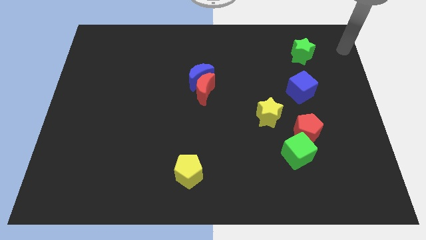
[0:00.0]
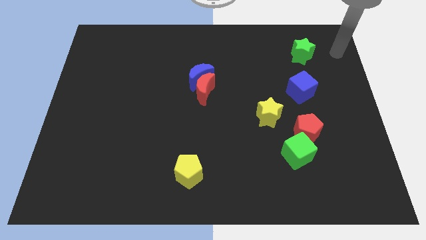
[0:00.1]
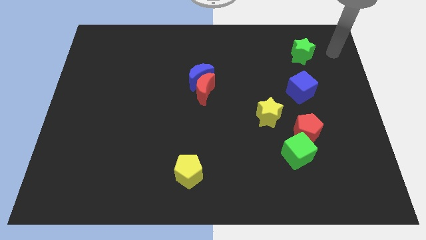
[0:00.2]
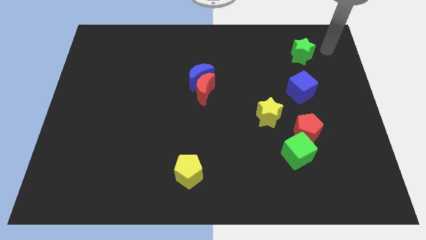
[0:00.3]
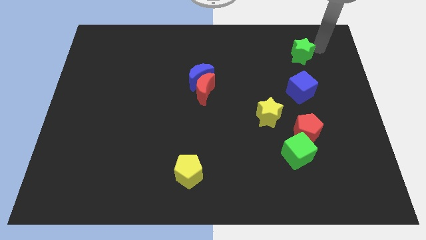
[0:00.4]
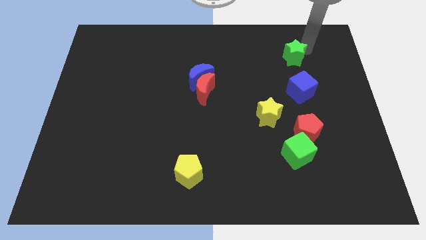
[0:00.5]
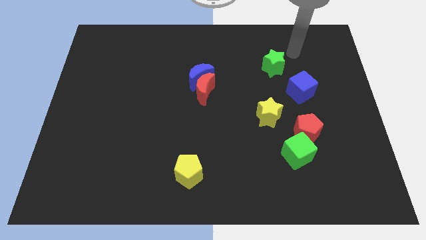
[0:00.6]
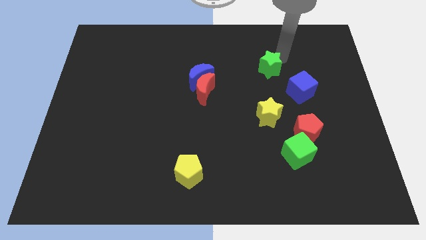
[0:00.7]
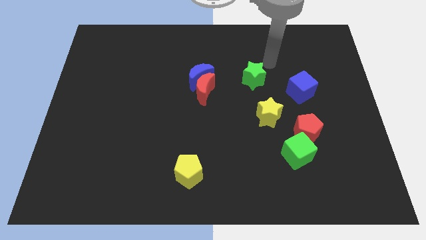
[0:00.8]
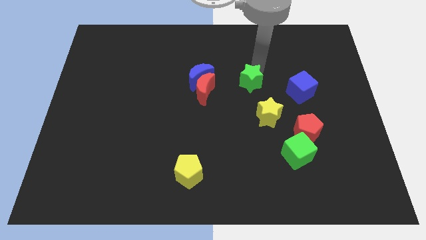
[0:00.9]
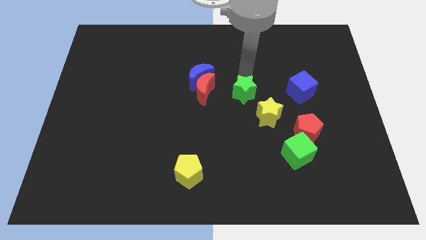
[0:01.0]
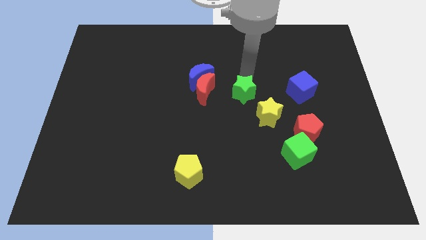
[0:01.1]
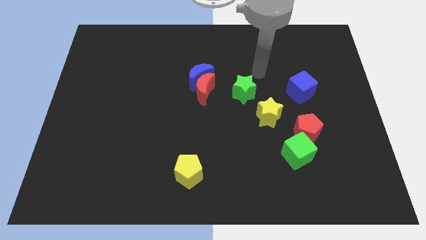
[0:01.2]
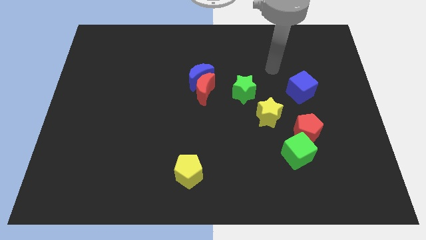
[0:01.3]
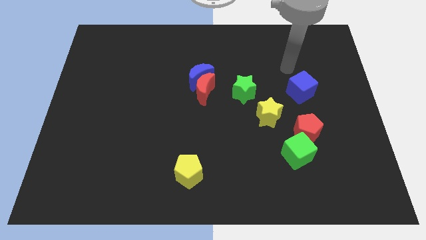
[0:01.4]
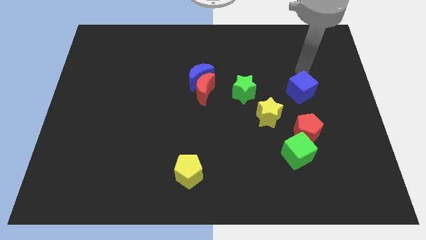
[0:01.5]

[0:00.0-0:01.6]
move green star towards middle of the board

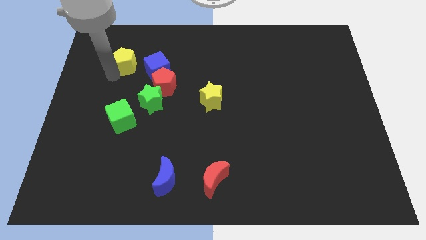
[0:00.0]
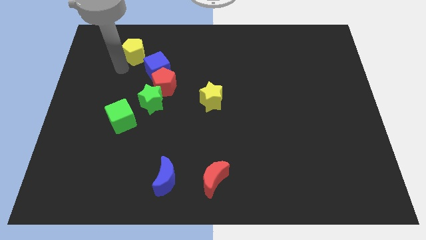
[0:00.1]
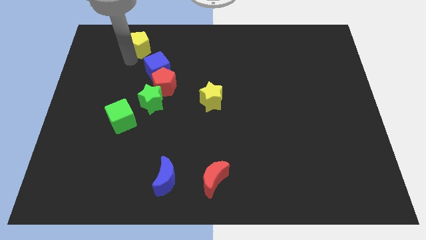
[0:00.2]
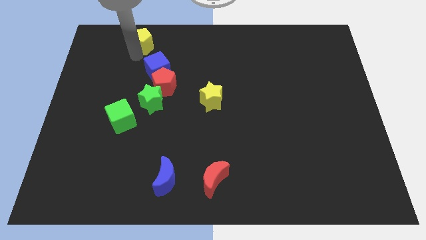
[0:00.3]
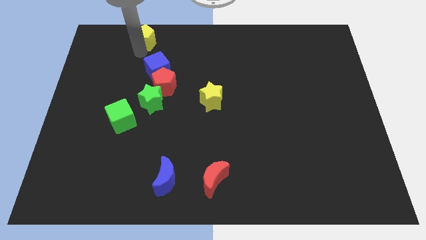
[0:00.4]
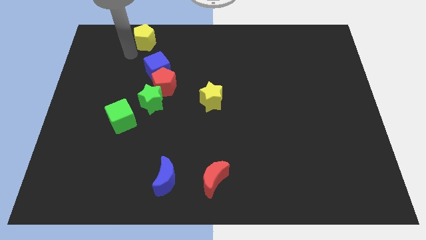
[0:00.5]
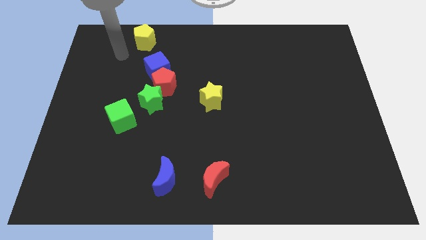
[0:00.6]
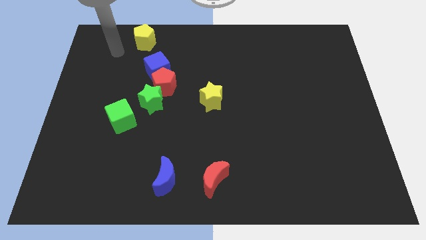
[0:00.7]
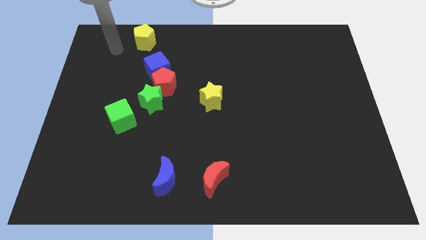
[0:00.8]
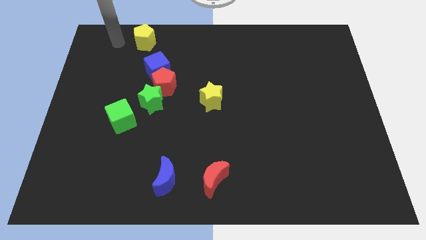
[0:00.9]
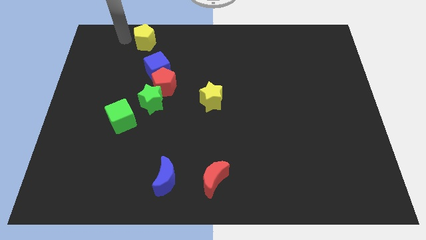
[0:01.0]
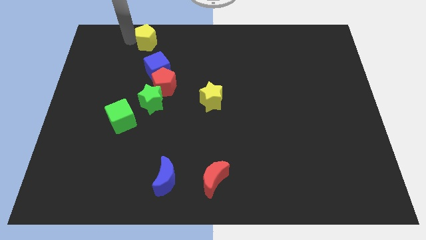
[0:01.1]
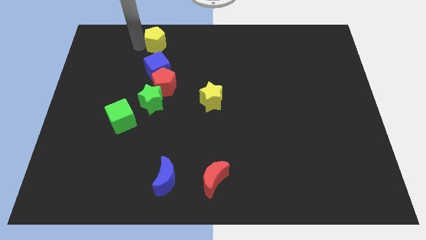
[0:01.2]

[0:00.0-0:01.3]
slide the yellow pentagon to the top of the blue moon

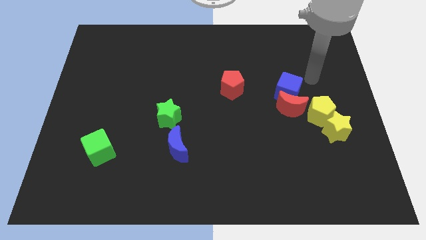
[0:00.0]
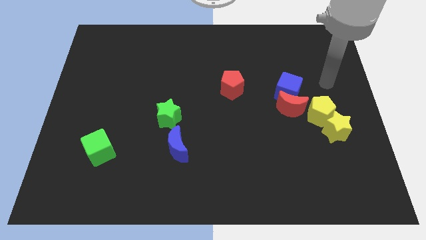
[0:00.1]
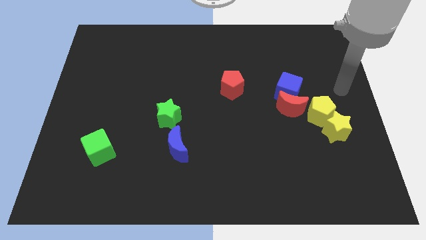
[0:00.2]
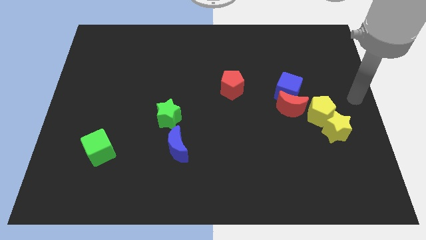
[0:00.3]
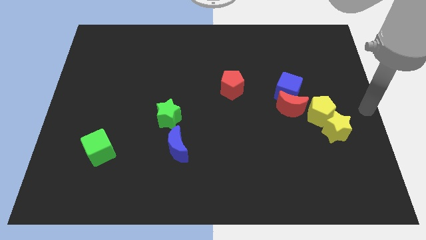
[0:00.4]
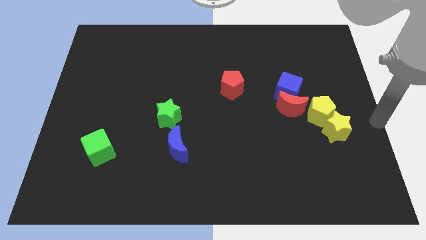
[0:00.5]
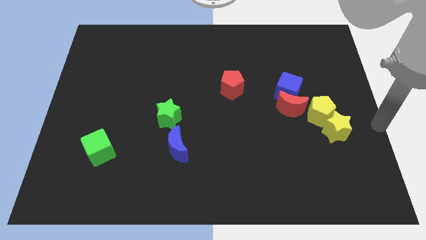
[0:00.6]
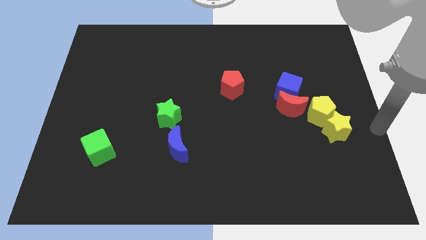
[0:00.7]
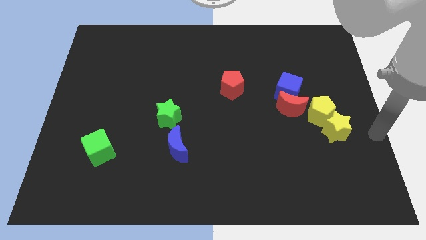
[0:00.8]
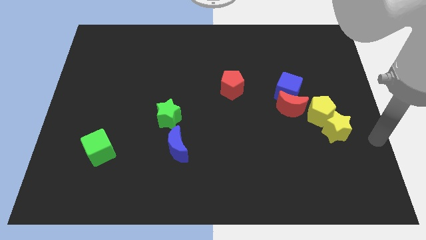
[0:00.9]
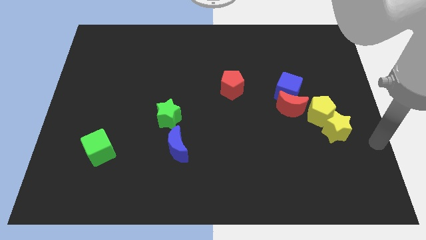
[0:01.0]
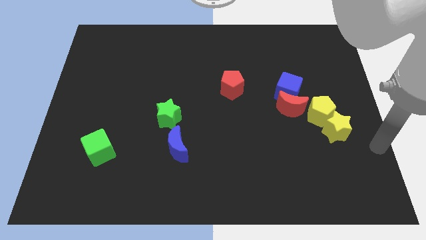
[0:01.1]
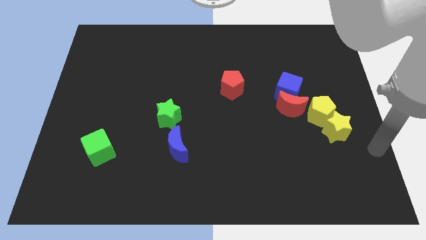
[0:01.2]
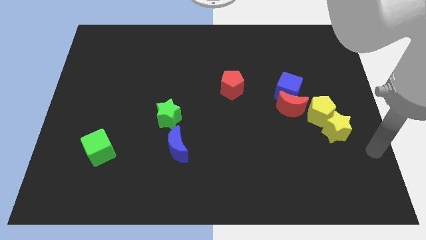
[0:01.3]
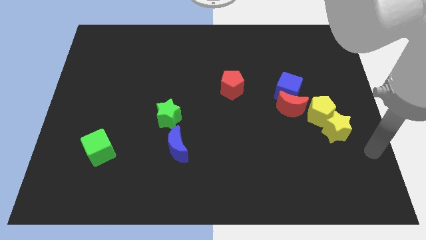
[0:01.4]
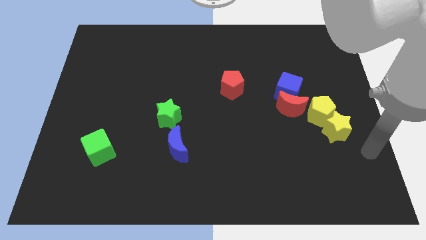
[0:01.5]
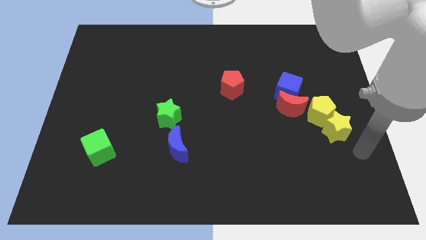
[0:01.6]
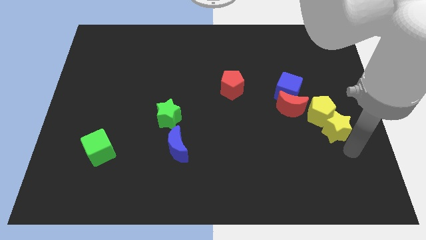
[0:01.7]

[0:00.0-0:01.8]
point your arm at the bottom of yellow star

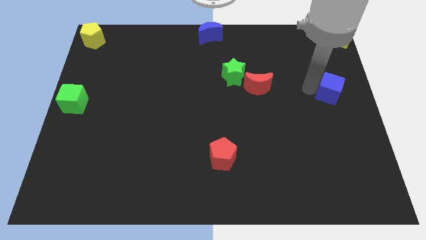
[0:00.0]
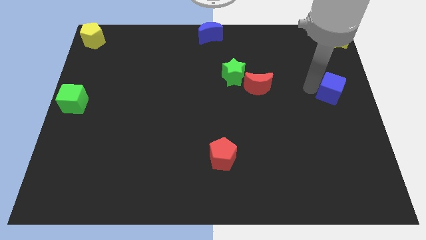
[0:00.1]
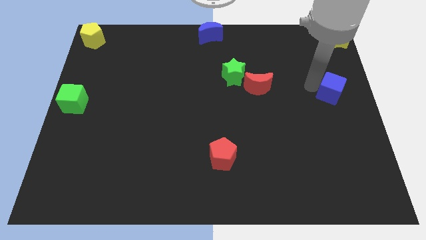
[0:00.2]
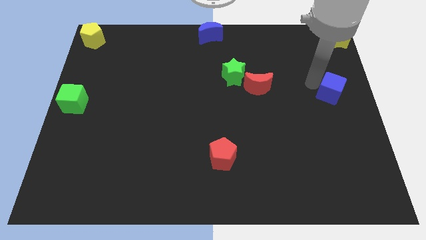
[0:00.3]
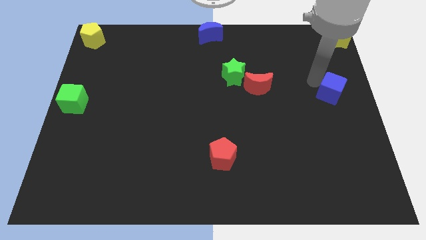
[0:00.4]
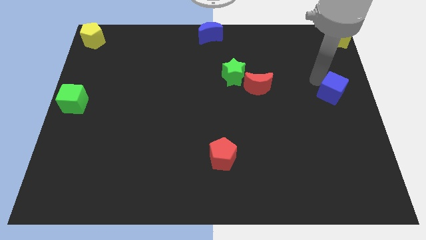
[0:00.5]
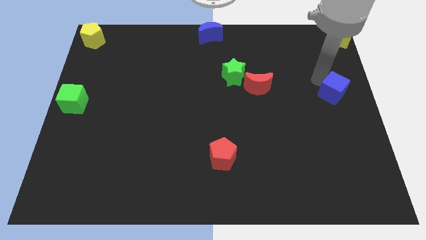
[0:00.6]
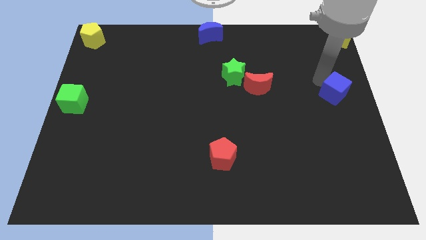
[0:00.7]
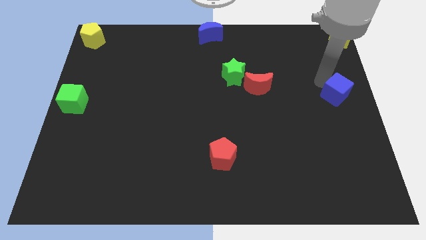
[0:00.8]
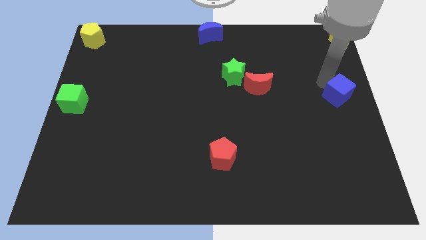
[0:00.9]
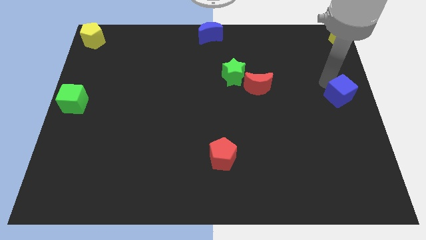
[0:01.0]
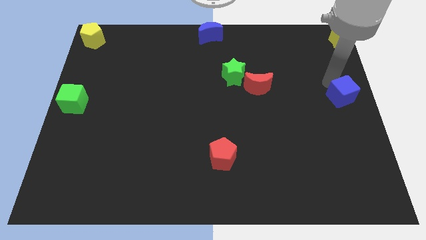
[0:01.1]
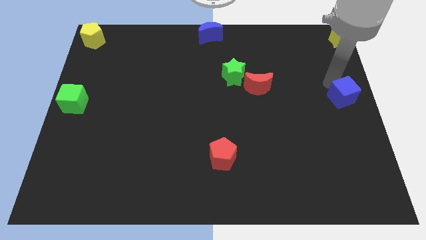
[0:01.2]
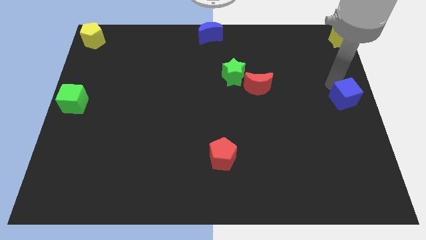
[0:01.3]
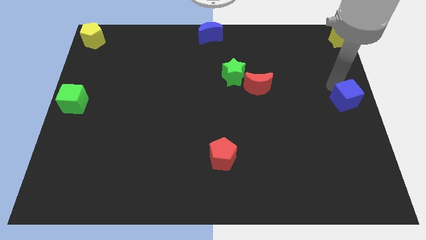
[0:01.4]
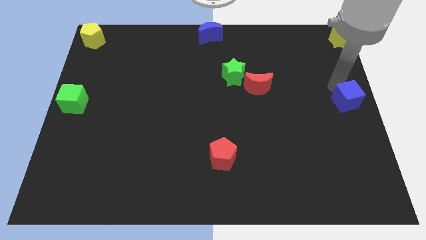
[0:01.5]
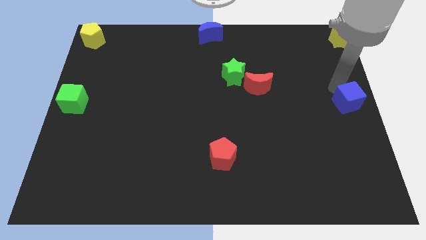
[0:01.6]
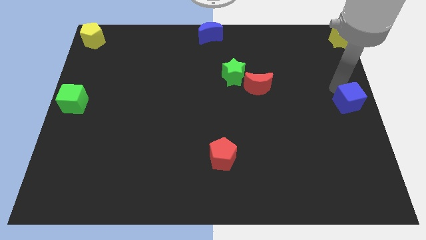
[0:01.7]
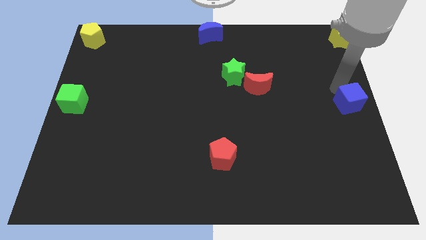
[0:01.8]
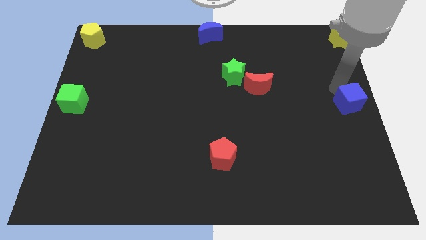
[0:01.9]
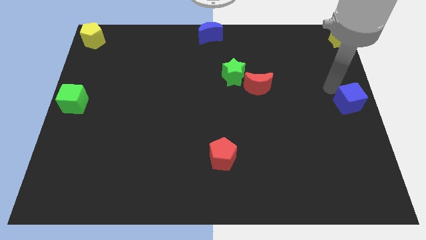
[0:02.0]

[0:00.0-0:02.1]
push the blue cube to the right center of the board

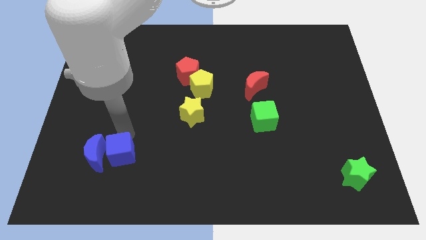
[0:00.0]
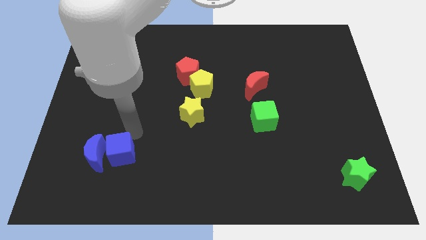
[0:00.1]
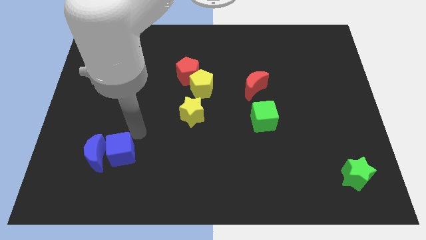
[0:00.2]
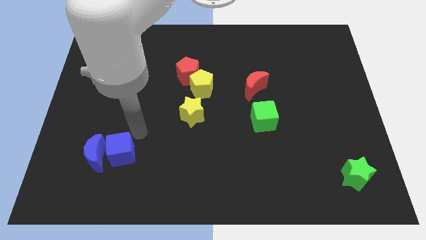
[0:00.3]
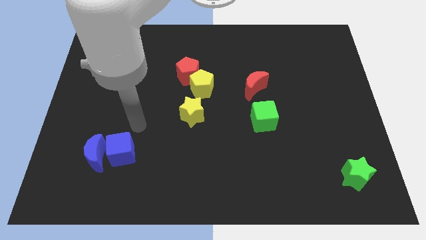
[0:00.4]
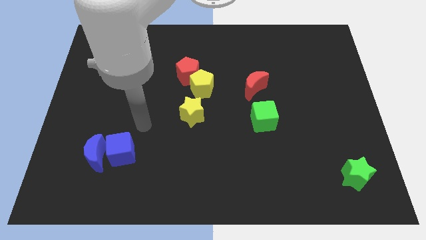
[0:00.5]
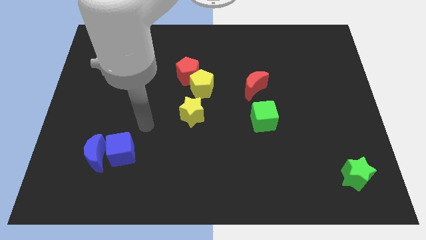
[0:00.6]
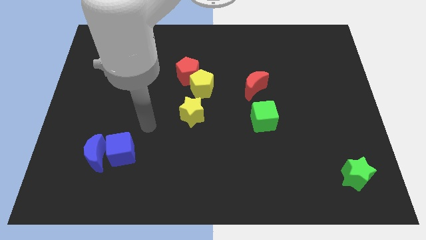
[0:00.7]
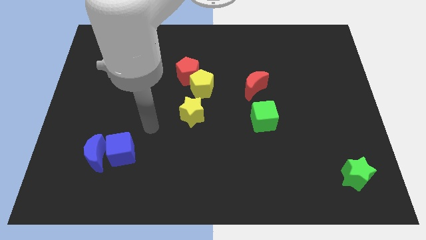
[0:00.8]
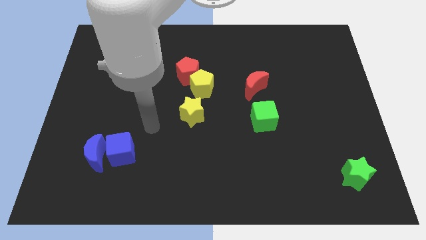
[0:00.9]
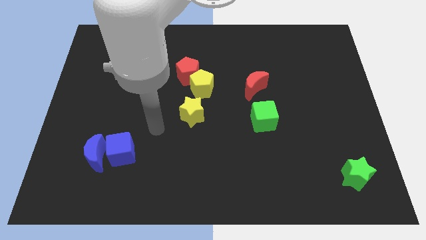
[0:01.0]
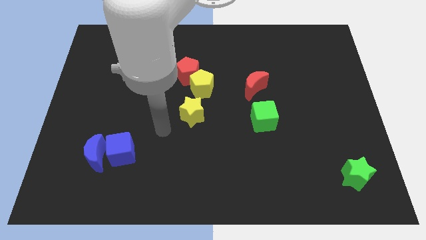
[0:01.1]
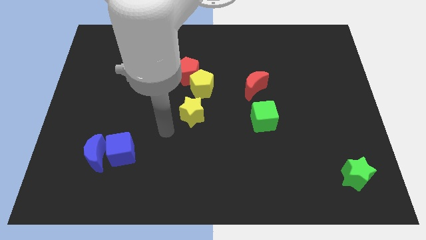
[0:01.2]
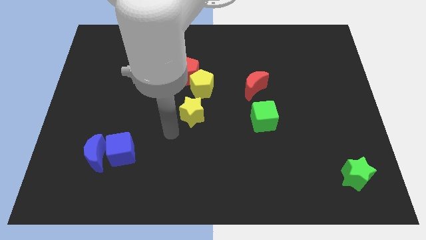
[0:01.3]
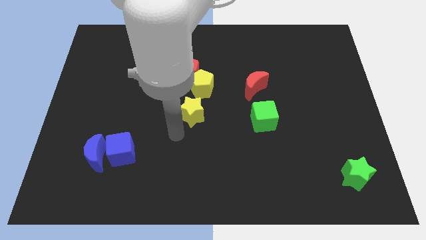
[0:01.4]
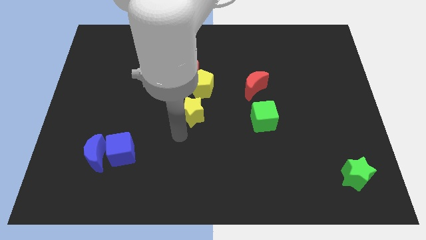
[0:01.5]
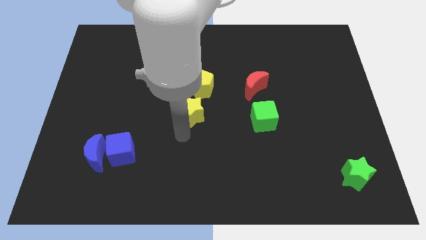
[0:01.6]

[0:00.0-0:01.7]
move your arm away from the blue cube

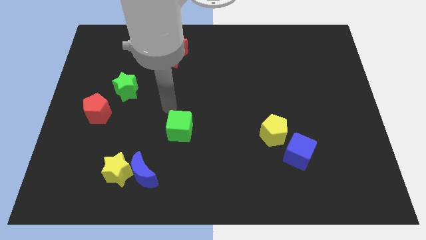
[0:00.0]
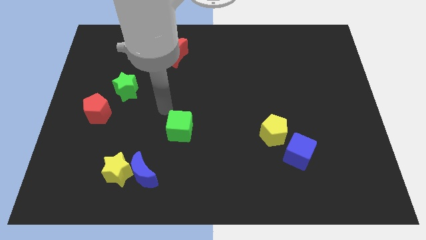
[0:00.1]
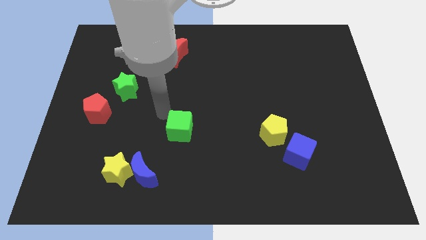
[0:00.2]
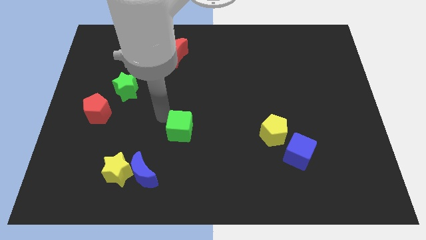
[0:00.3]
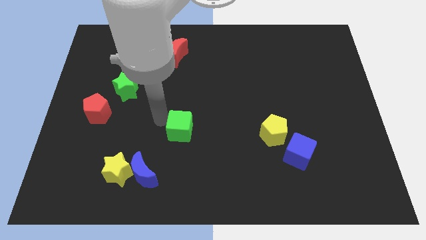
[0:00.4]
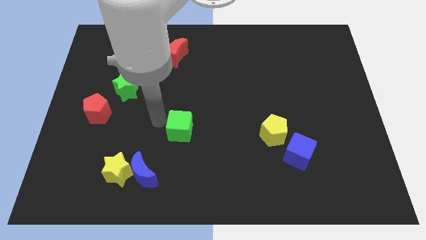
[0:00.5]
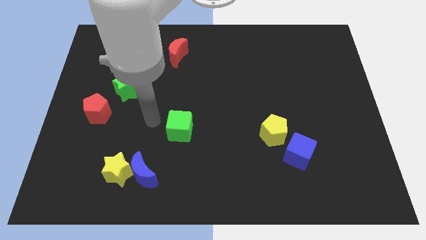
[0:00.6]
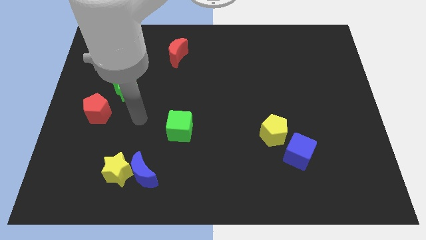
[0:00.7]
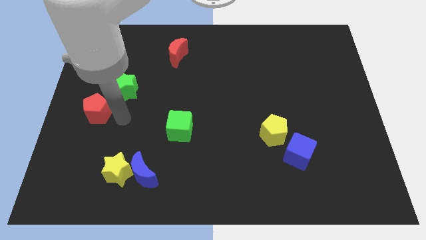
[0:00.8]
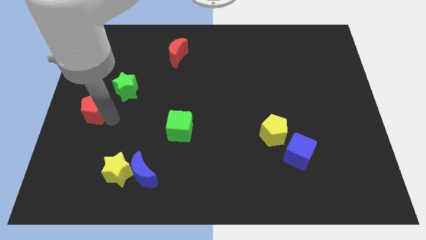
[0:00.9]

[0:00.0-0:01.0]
place the arm right to the red pentagon
